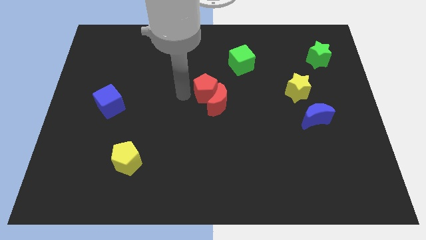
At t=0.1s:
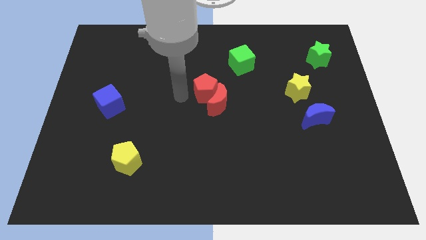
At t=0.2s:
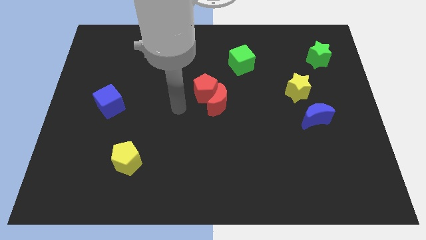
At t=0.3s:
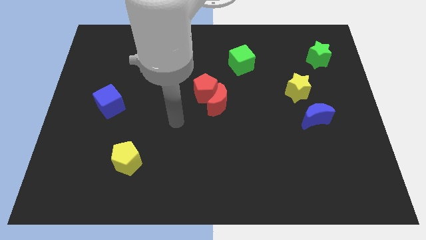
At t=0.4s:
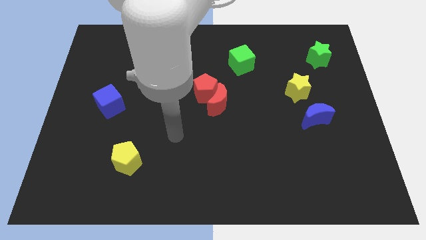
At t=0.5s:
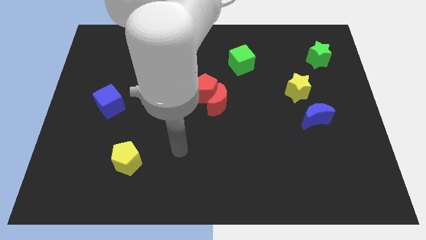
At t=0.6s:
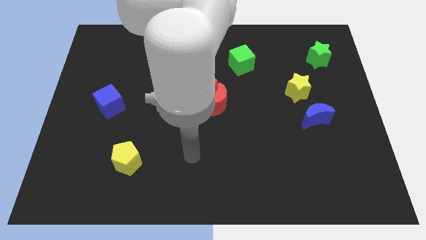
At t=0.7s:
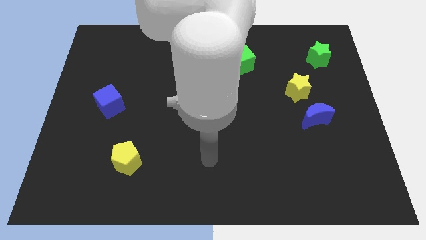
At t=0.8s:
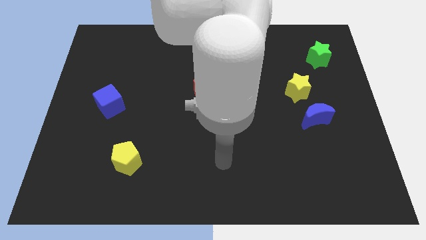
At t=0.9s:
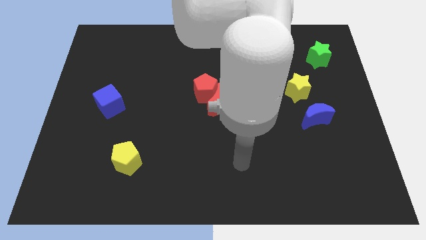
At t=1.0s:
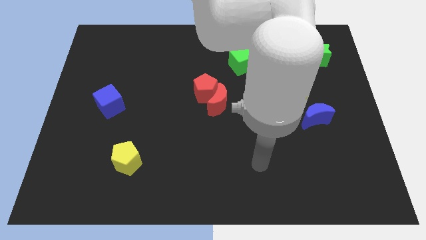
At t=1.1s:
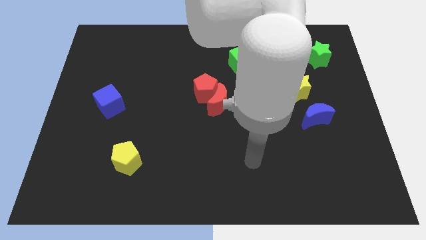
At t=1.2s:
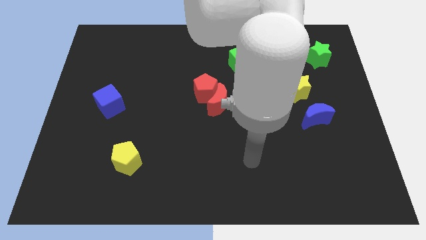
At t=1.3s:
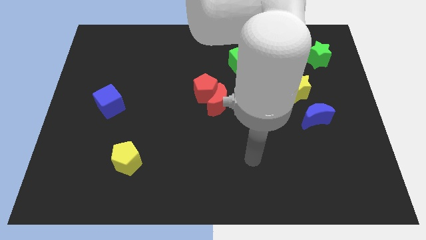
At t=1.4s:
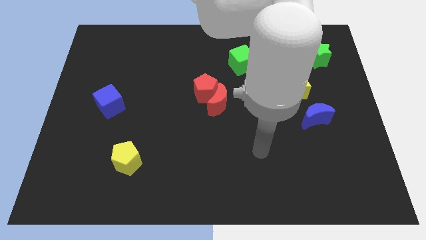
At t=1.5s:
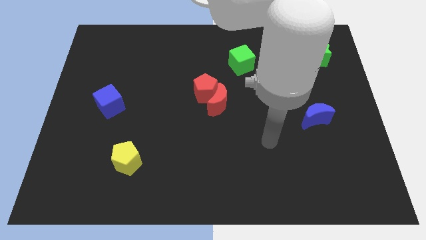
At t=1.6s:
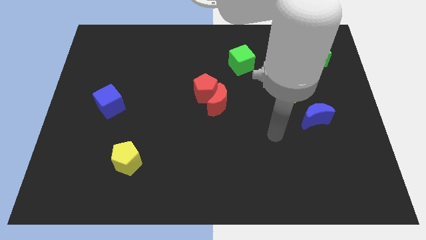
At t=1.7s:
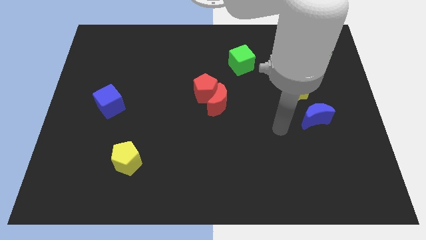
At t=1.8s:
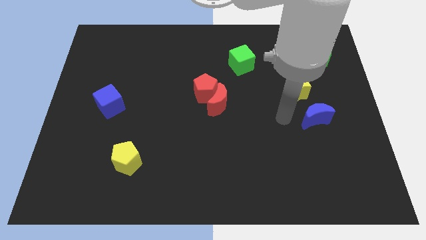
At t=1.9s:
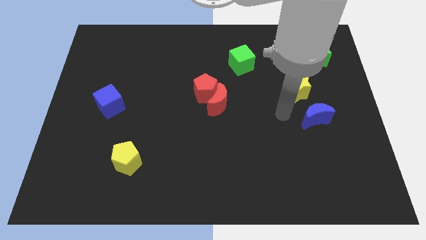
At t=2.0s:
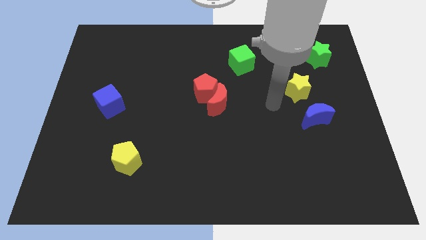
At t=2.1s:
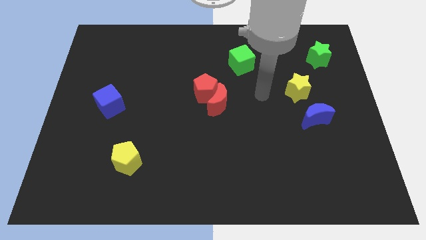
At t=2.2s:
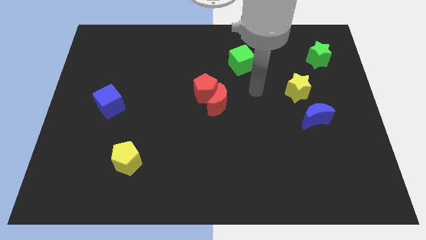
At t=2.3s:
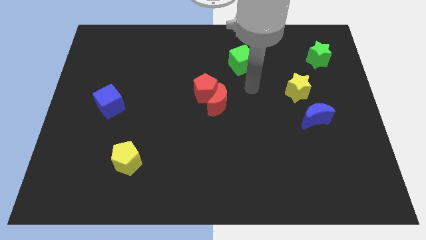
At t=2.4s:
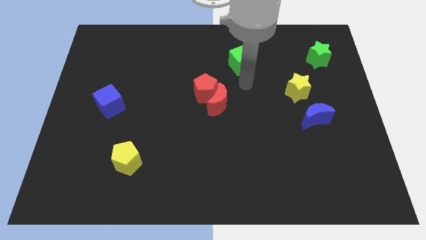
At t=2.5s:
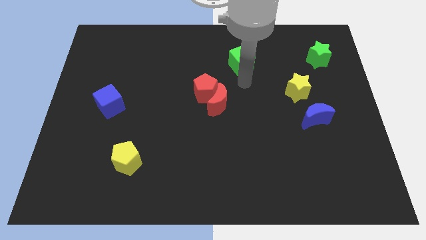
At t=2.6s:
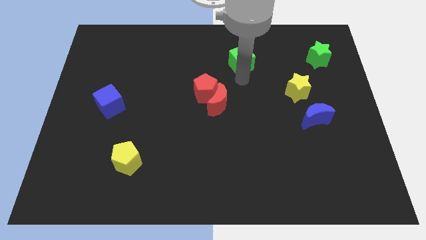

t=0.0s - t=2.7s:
move your arm to the bottom of green cube

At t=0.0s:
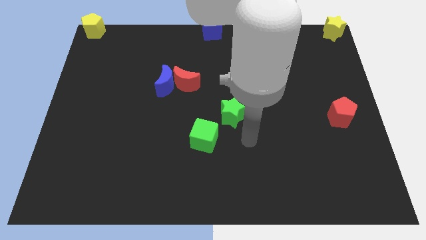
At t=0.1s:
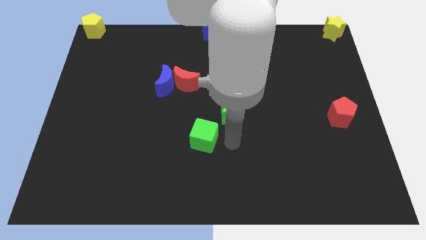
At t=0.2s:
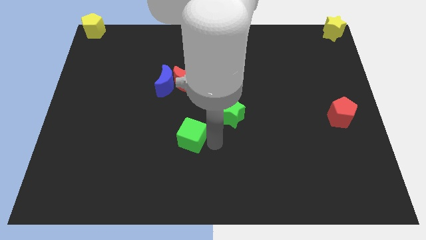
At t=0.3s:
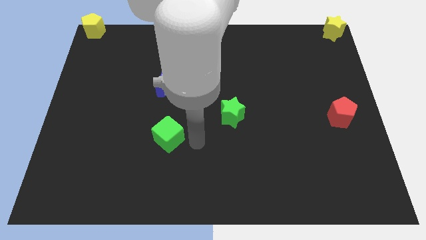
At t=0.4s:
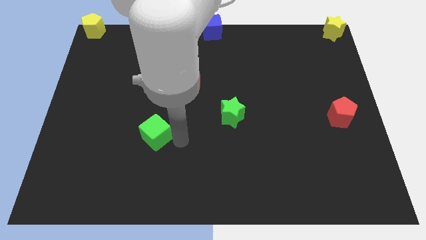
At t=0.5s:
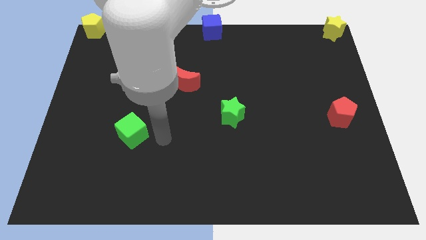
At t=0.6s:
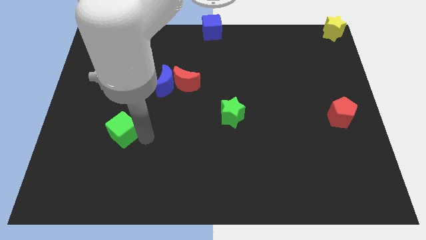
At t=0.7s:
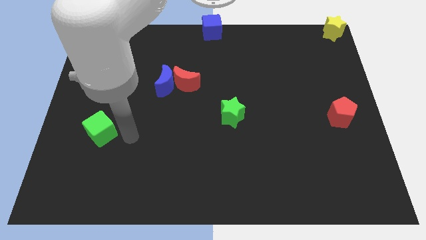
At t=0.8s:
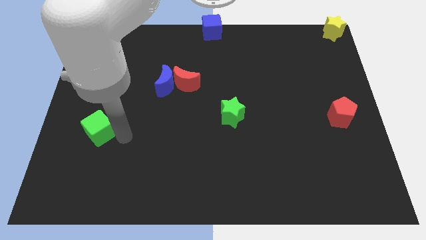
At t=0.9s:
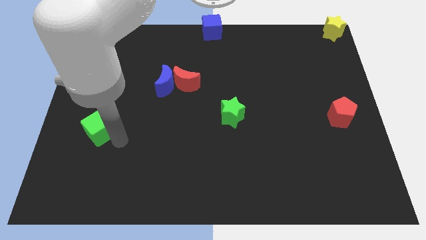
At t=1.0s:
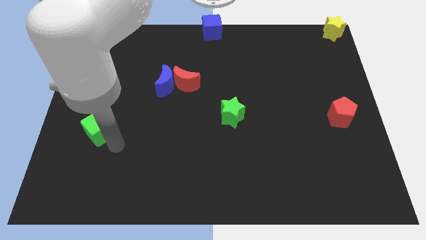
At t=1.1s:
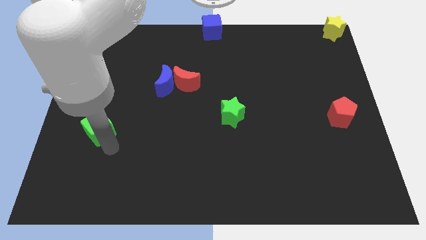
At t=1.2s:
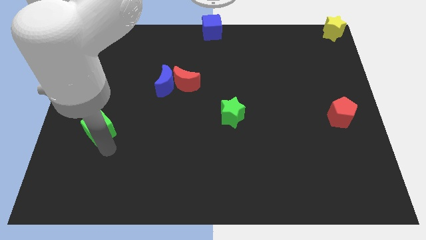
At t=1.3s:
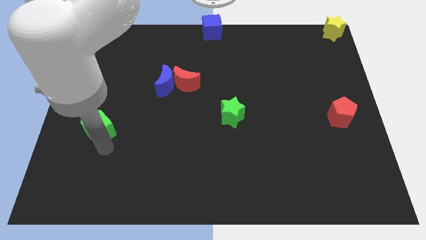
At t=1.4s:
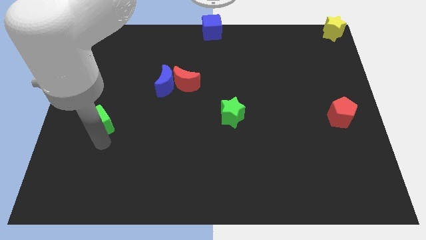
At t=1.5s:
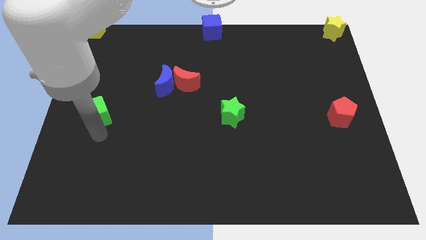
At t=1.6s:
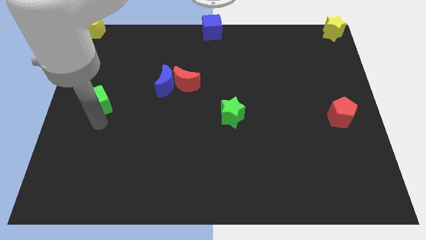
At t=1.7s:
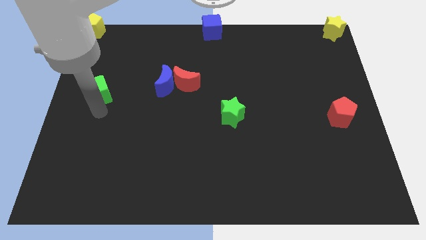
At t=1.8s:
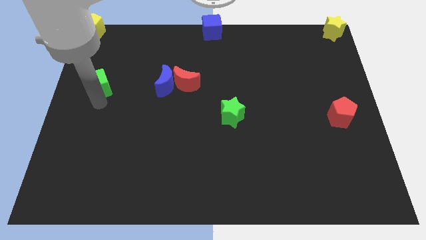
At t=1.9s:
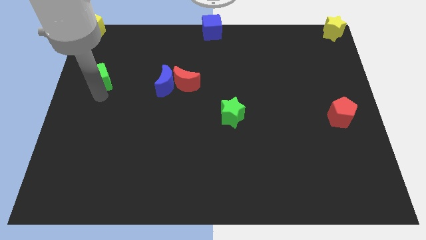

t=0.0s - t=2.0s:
move the green cube parallel left to the blue moon

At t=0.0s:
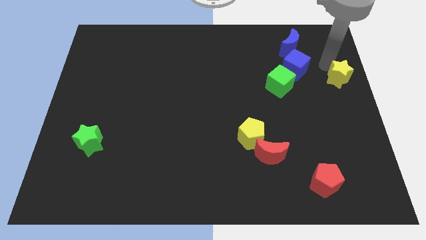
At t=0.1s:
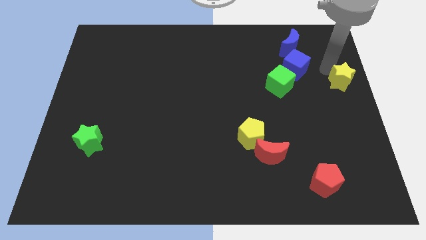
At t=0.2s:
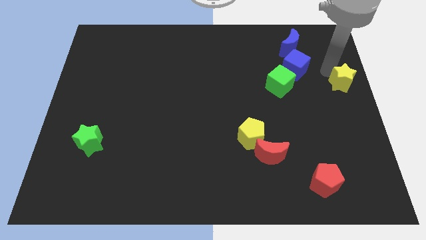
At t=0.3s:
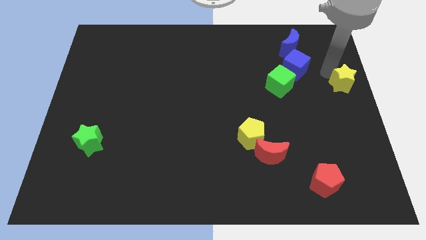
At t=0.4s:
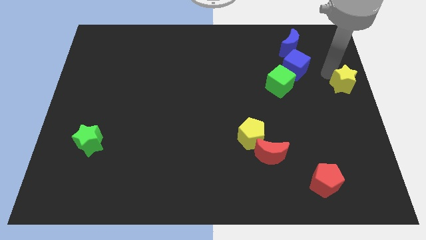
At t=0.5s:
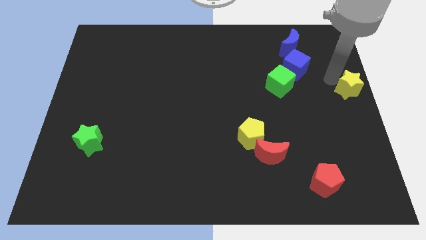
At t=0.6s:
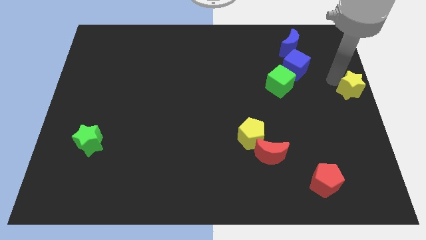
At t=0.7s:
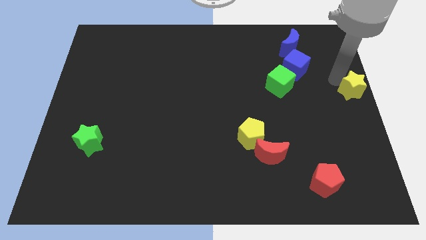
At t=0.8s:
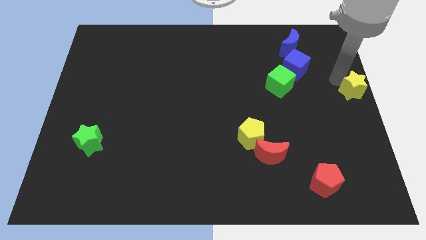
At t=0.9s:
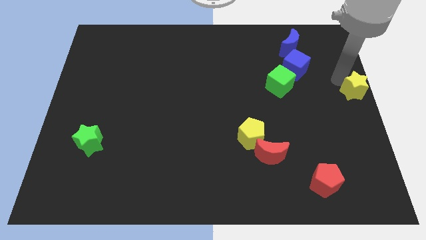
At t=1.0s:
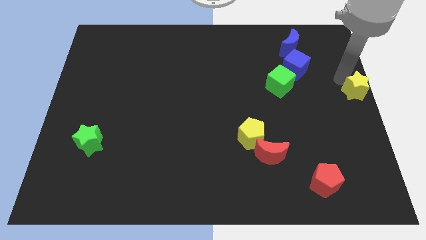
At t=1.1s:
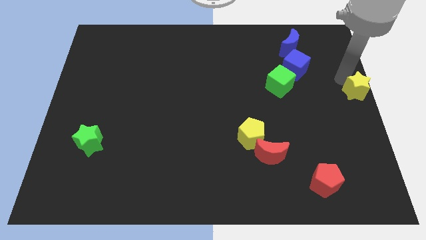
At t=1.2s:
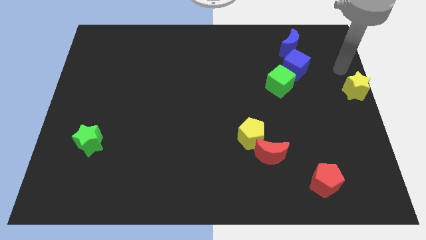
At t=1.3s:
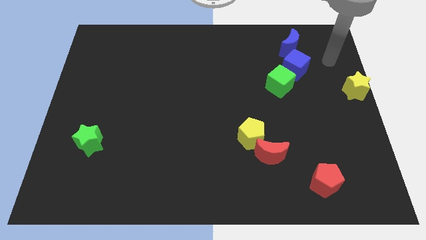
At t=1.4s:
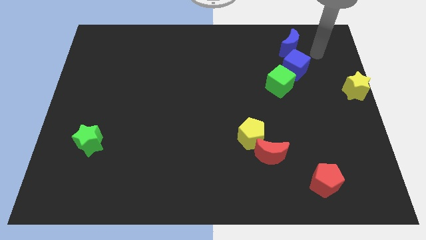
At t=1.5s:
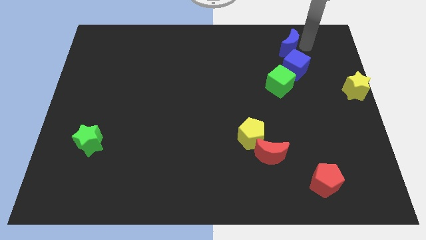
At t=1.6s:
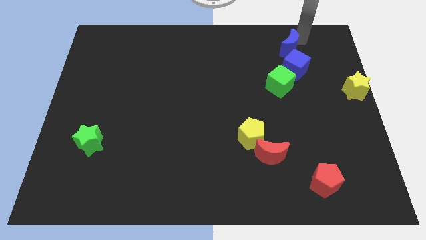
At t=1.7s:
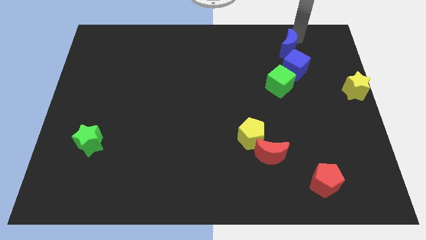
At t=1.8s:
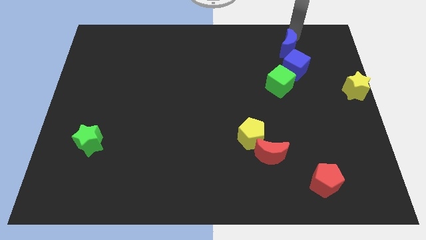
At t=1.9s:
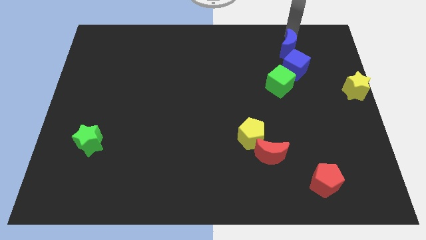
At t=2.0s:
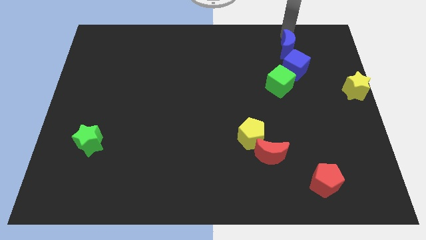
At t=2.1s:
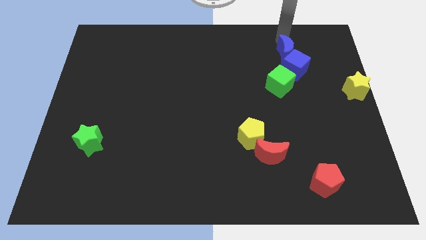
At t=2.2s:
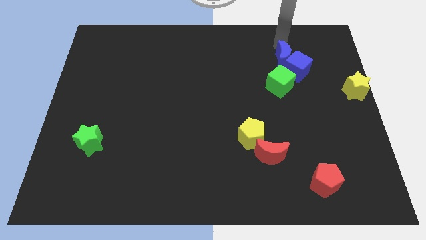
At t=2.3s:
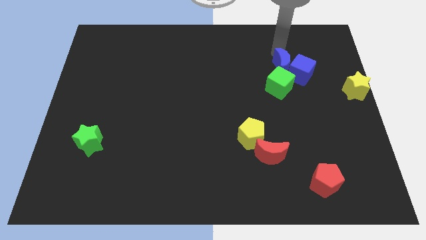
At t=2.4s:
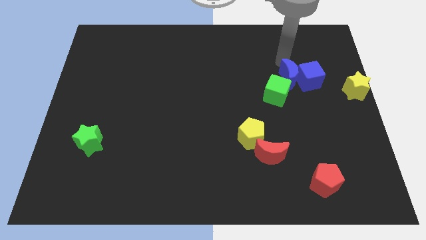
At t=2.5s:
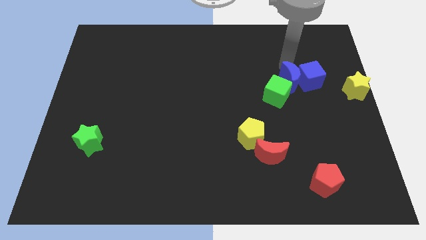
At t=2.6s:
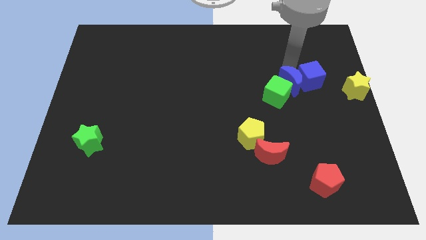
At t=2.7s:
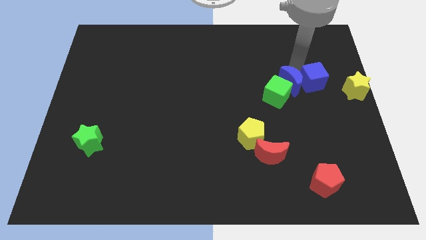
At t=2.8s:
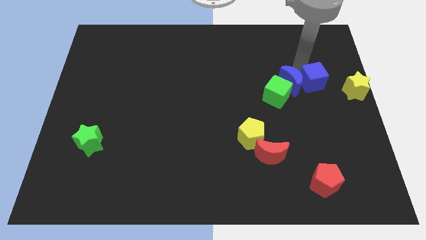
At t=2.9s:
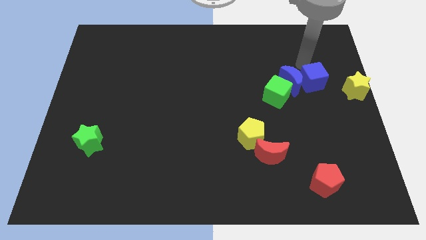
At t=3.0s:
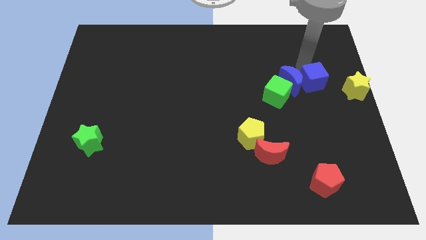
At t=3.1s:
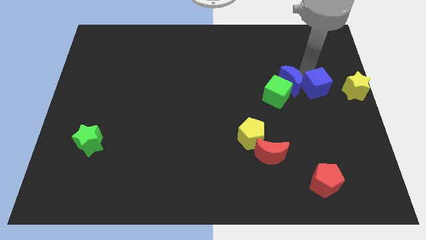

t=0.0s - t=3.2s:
push the blue moon to the right of the green cube

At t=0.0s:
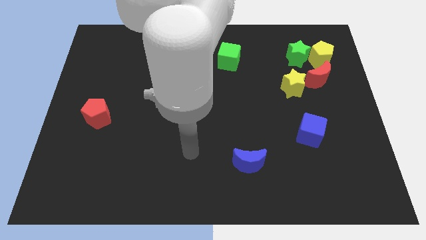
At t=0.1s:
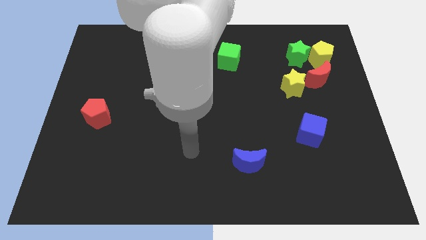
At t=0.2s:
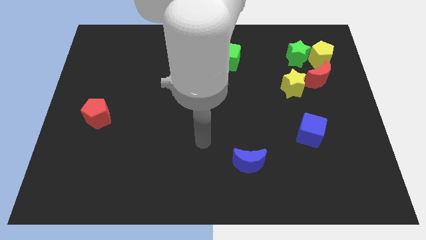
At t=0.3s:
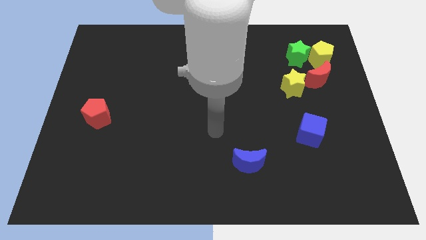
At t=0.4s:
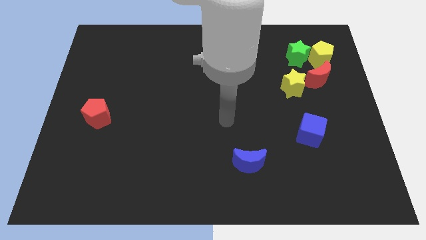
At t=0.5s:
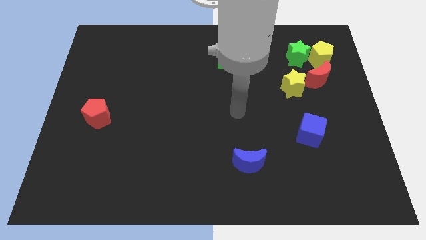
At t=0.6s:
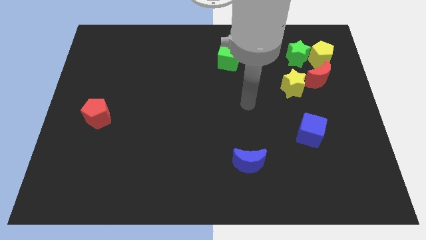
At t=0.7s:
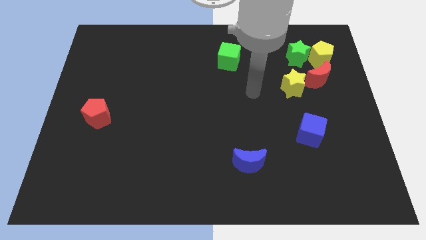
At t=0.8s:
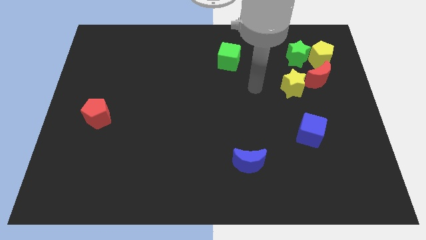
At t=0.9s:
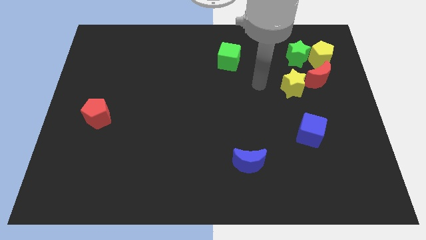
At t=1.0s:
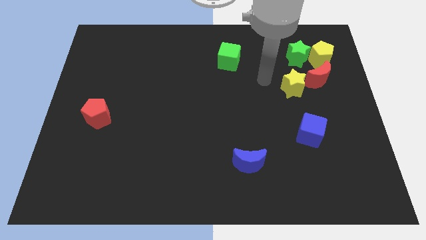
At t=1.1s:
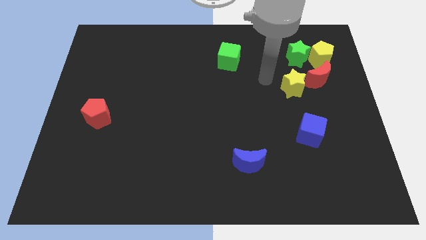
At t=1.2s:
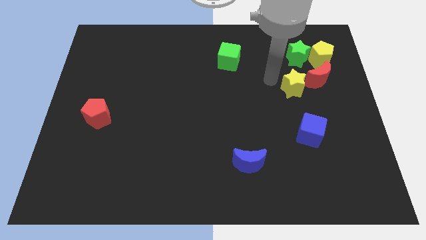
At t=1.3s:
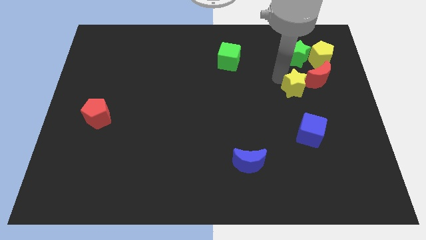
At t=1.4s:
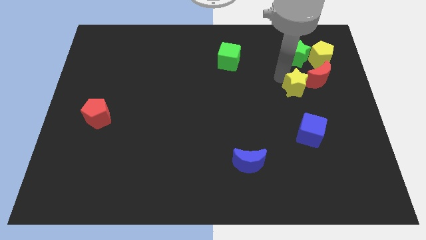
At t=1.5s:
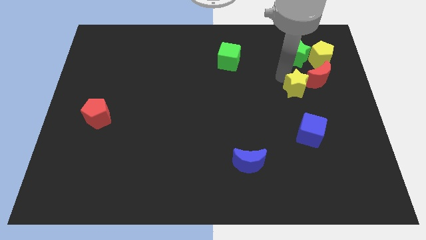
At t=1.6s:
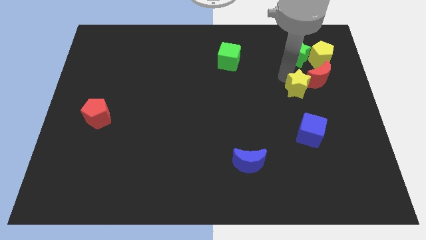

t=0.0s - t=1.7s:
move the arm towards the yellow star
